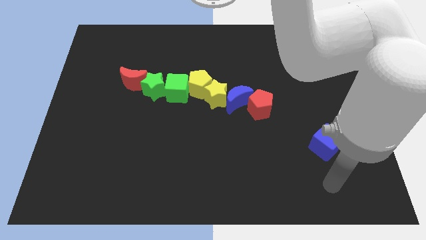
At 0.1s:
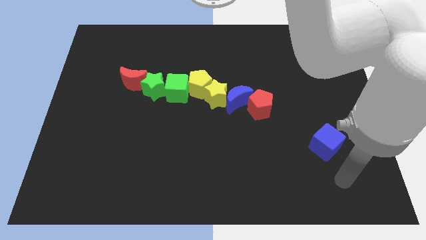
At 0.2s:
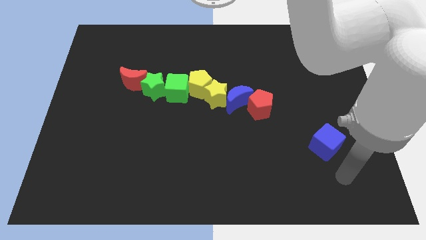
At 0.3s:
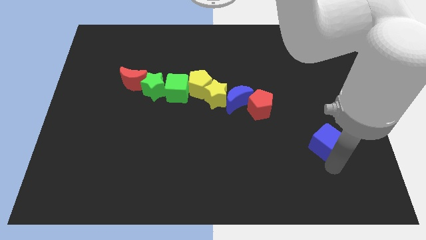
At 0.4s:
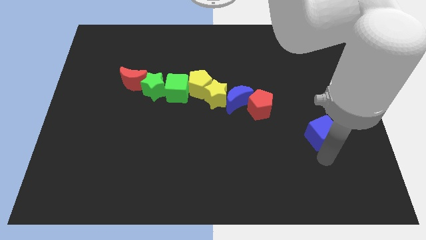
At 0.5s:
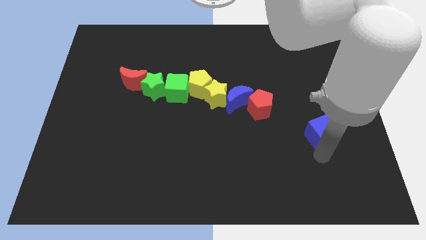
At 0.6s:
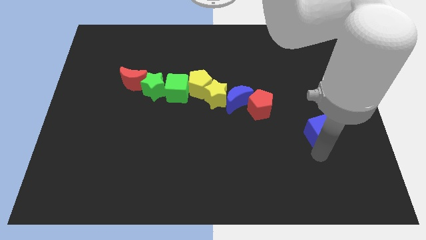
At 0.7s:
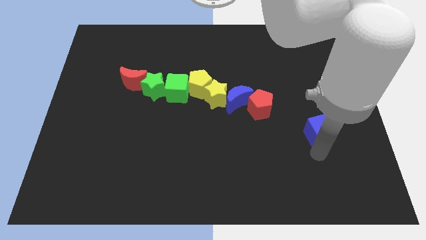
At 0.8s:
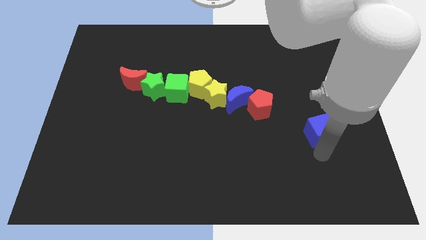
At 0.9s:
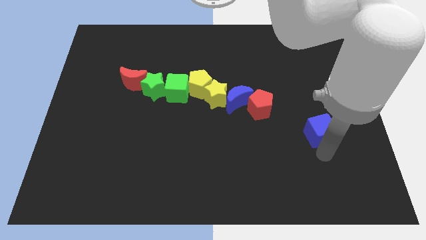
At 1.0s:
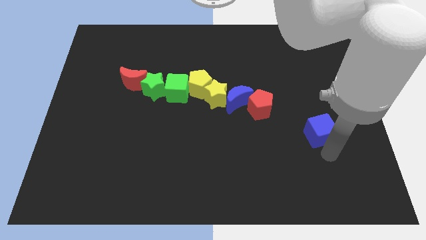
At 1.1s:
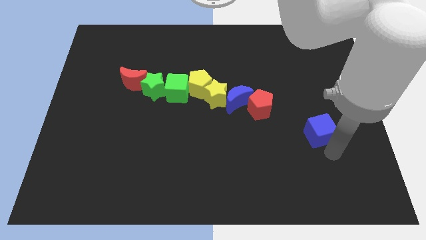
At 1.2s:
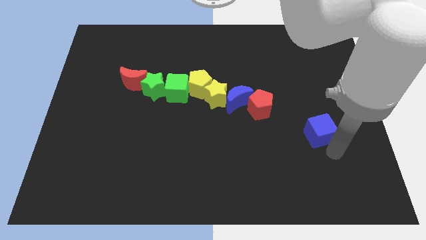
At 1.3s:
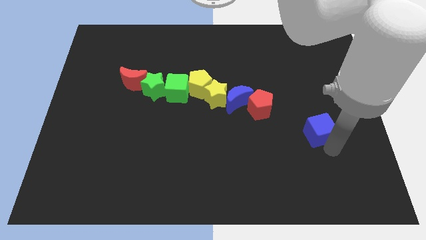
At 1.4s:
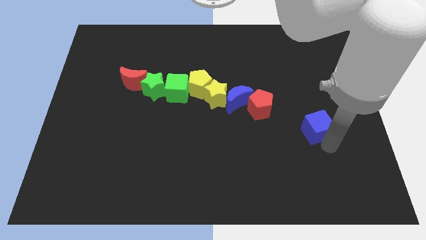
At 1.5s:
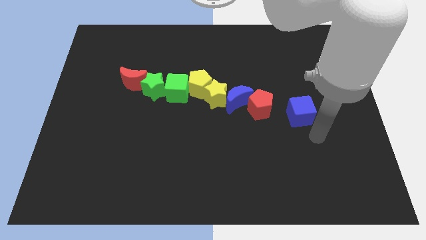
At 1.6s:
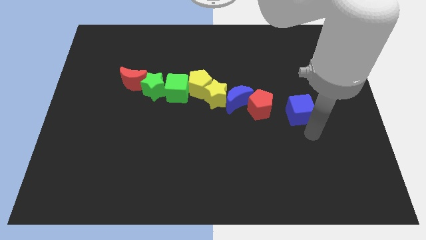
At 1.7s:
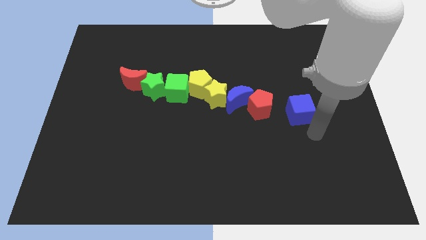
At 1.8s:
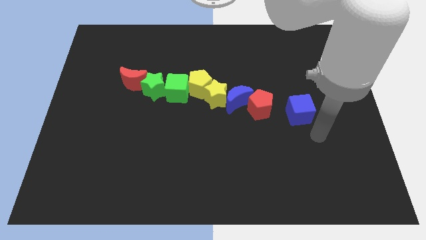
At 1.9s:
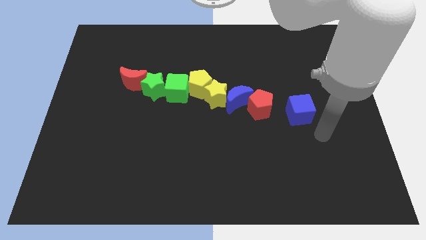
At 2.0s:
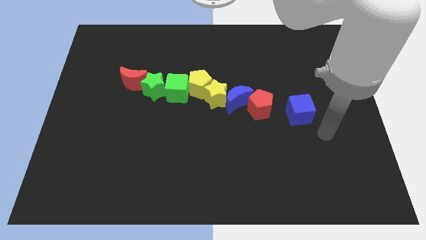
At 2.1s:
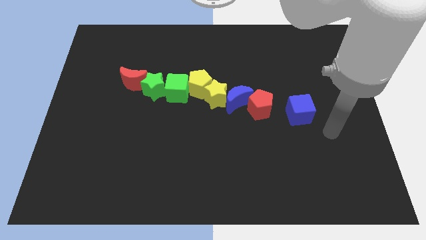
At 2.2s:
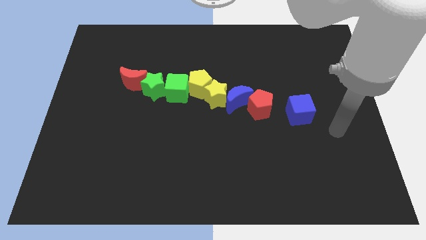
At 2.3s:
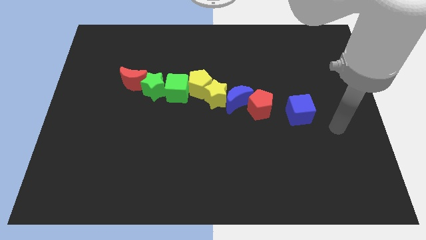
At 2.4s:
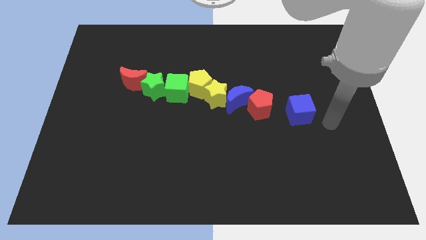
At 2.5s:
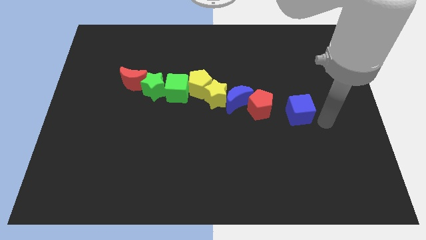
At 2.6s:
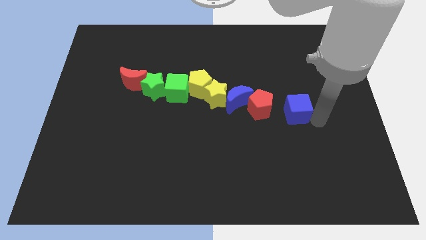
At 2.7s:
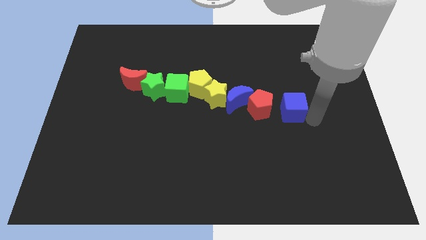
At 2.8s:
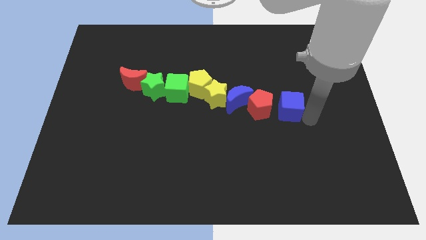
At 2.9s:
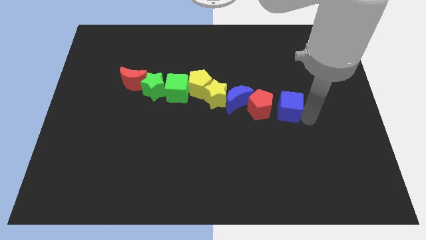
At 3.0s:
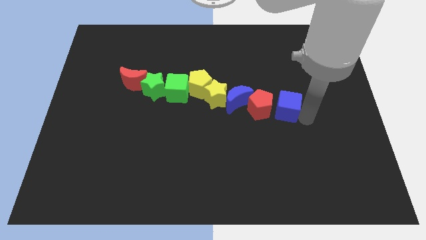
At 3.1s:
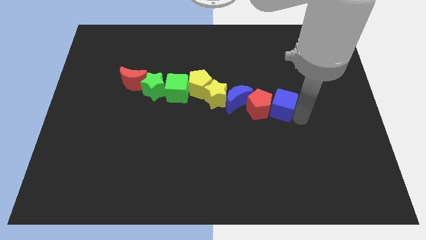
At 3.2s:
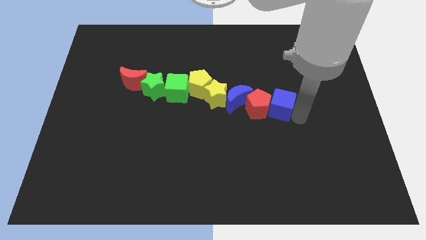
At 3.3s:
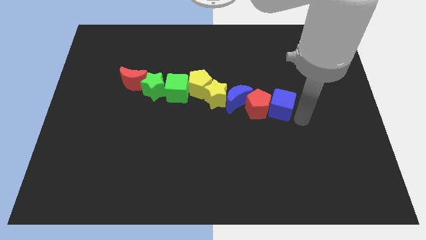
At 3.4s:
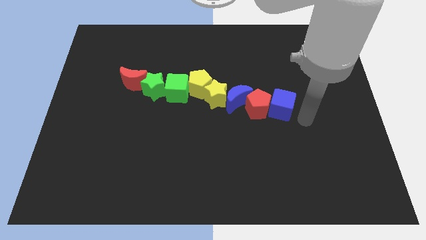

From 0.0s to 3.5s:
drag the blue cube into the right side of the red pentagon

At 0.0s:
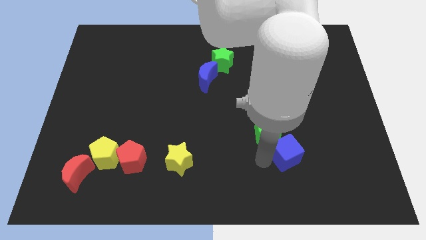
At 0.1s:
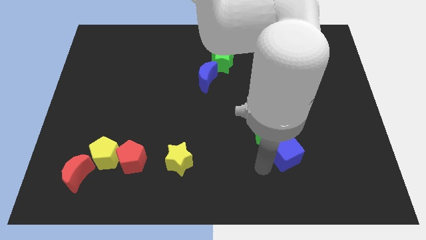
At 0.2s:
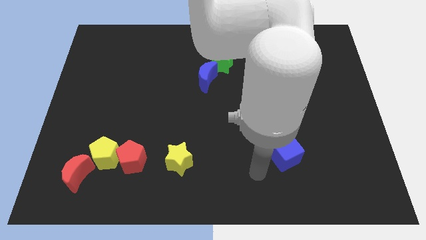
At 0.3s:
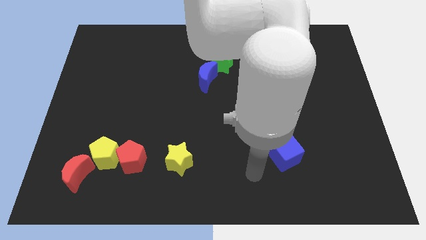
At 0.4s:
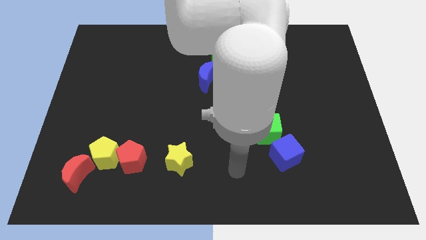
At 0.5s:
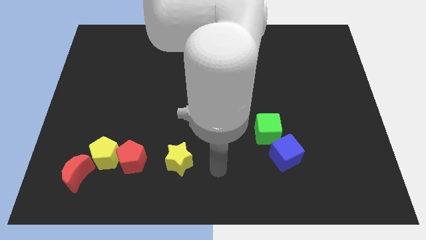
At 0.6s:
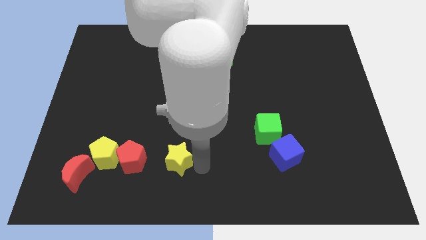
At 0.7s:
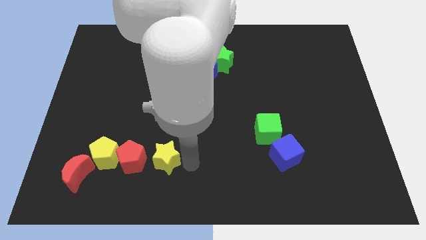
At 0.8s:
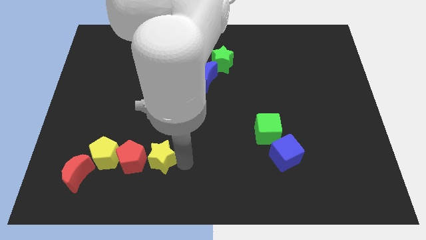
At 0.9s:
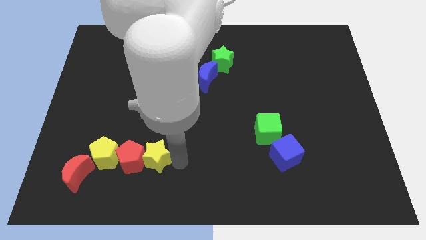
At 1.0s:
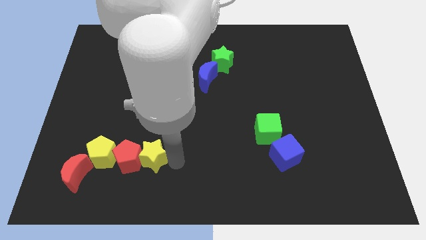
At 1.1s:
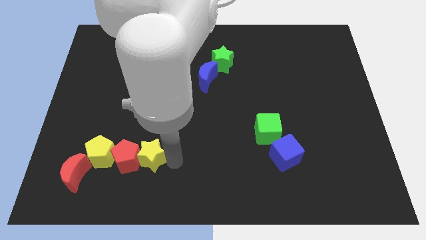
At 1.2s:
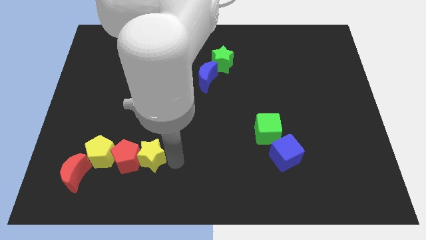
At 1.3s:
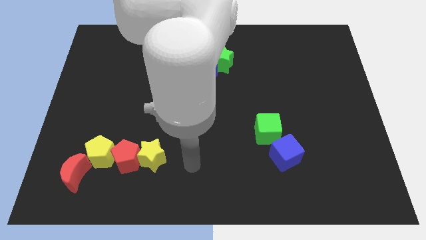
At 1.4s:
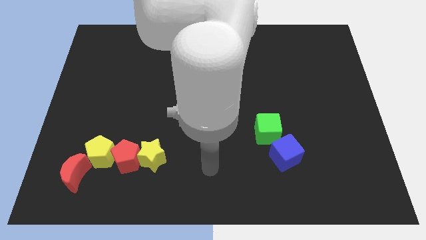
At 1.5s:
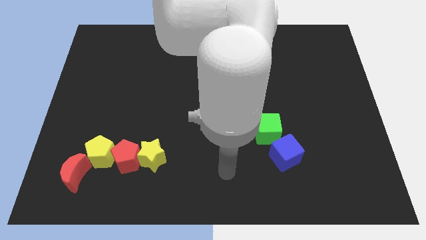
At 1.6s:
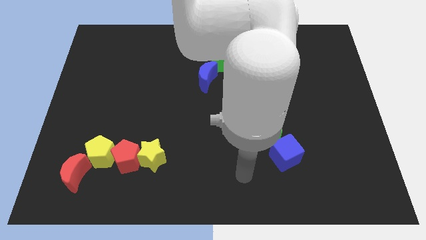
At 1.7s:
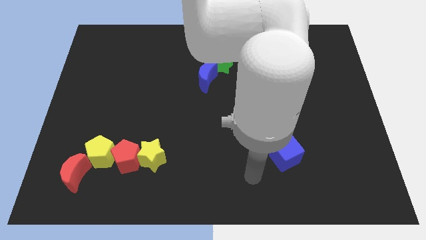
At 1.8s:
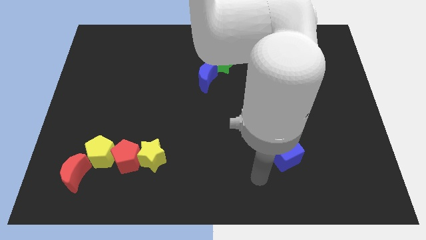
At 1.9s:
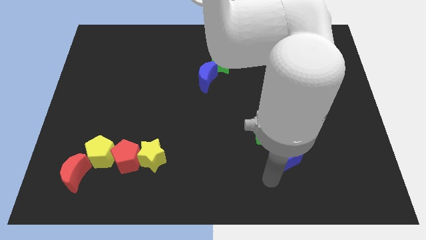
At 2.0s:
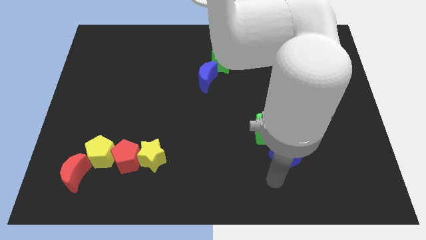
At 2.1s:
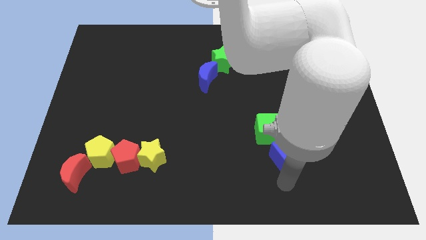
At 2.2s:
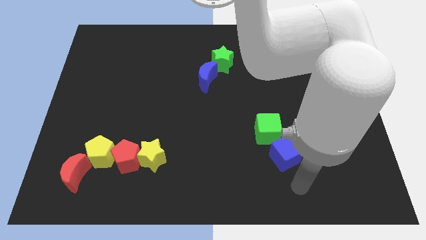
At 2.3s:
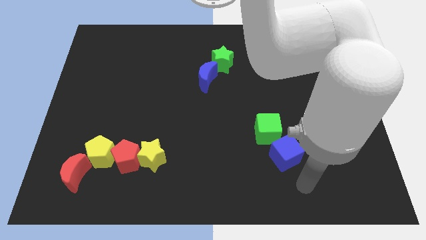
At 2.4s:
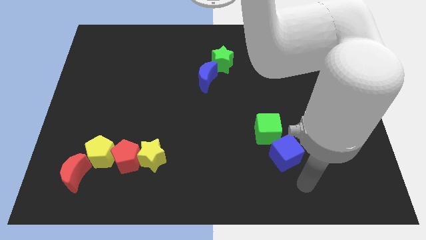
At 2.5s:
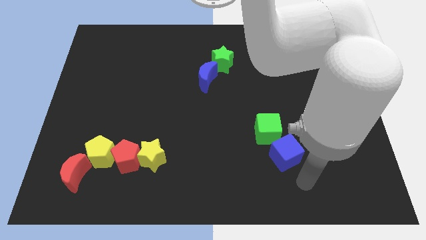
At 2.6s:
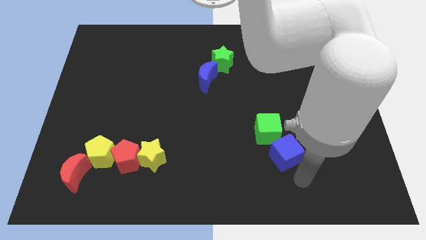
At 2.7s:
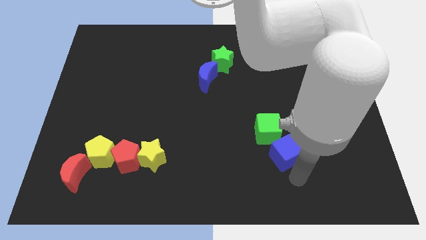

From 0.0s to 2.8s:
move the yellow star into the red pentagon

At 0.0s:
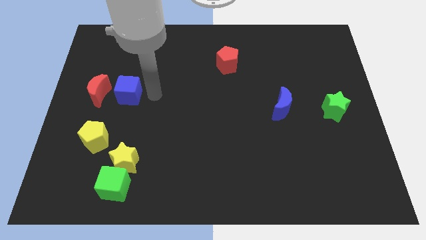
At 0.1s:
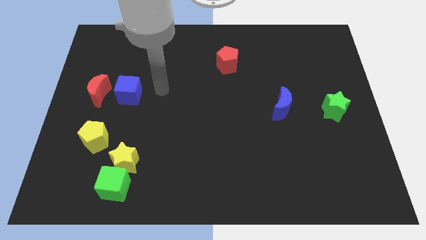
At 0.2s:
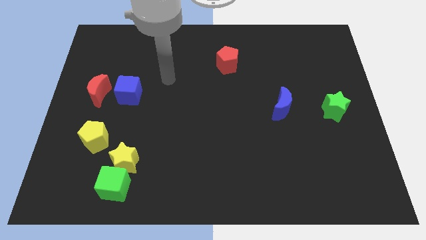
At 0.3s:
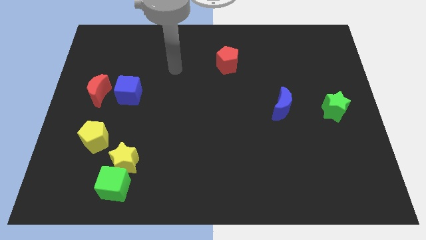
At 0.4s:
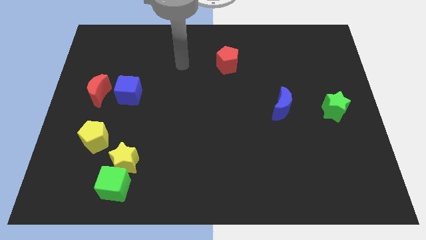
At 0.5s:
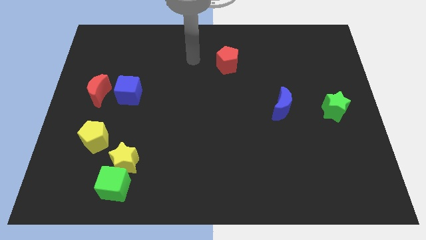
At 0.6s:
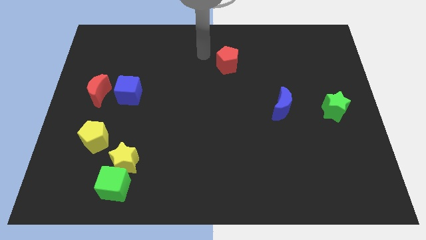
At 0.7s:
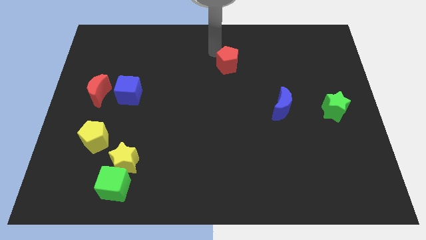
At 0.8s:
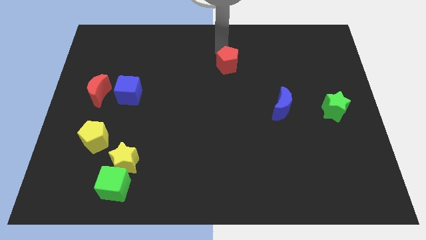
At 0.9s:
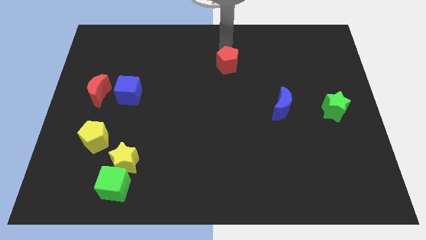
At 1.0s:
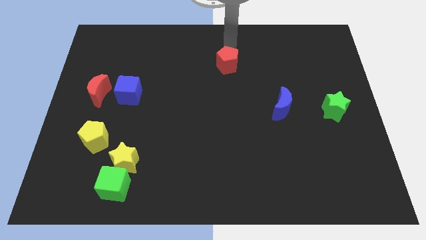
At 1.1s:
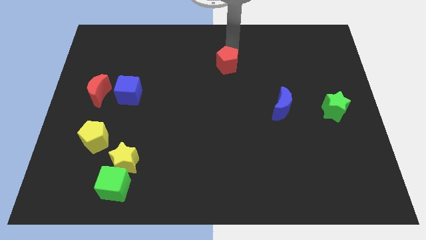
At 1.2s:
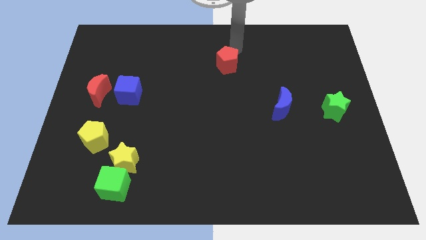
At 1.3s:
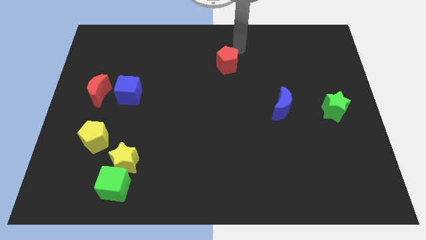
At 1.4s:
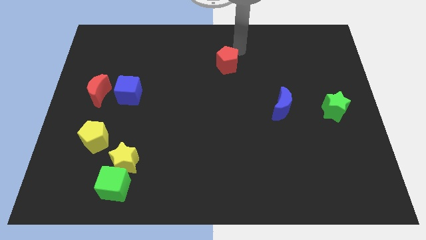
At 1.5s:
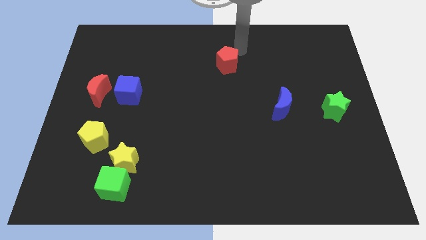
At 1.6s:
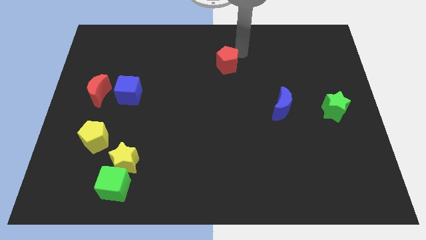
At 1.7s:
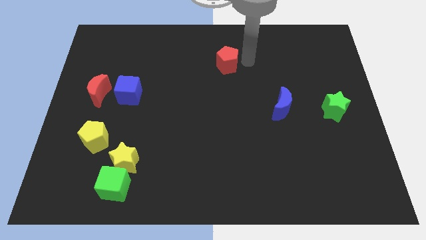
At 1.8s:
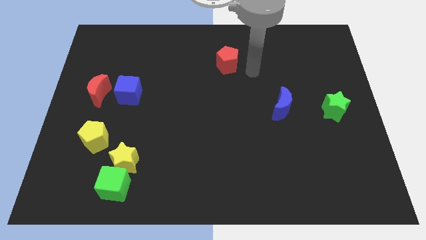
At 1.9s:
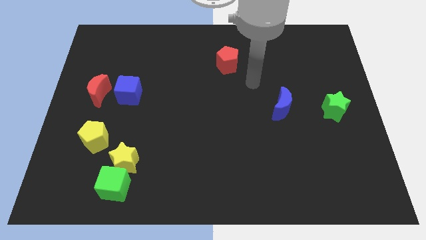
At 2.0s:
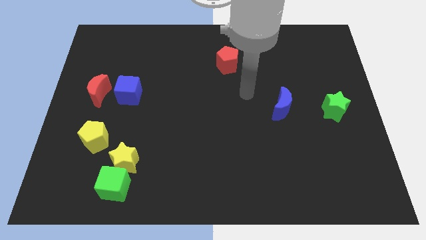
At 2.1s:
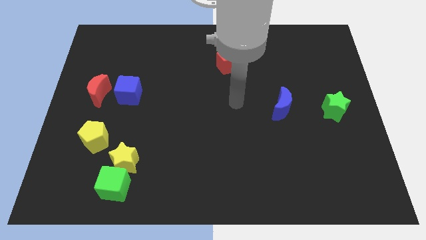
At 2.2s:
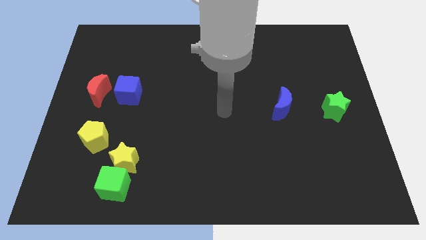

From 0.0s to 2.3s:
place your hand at the center of the board

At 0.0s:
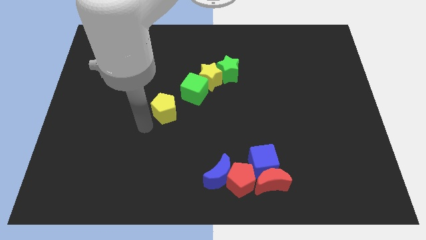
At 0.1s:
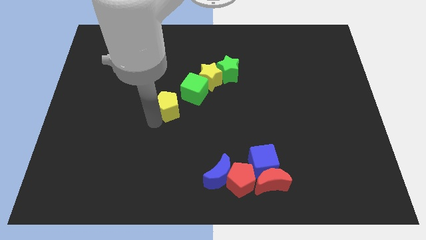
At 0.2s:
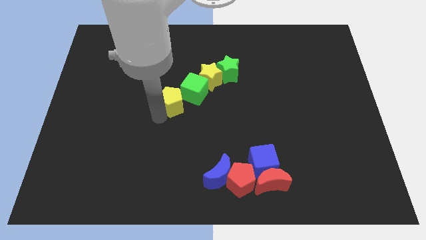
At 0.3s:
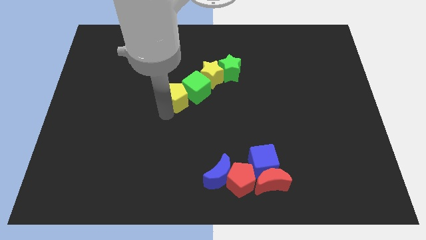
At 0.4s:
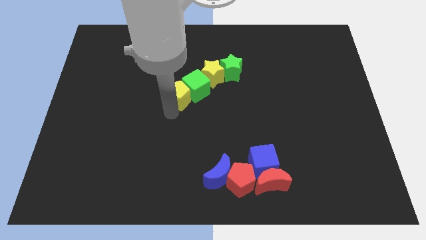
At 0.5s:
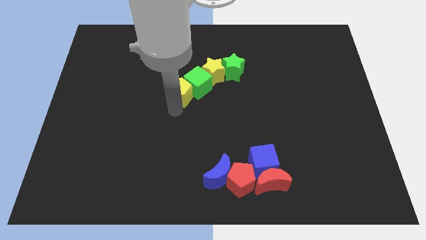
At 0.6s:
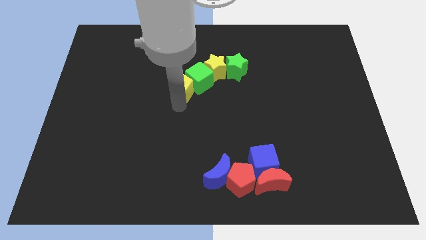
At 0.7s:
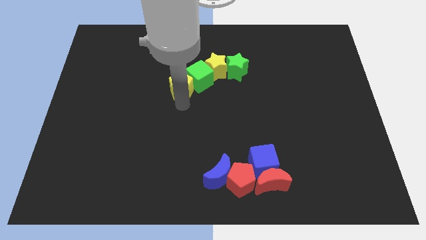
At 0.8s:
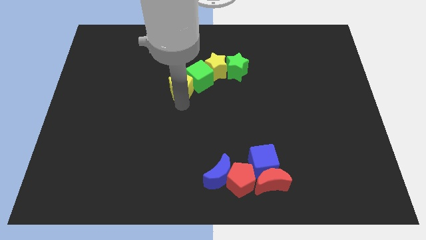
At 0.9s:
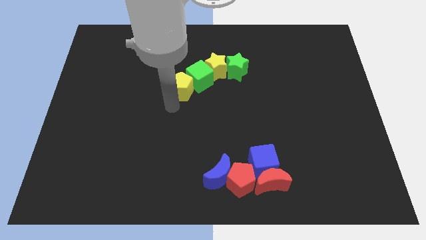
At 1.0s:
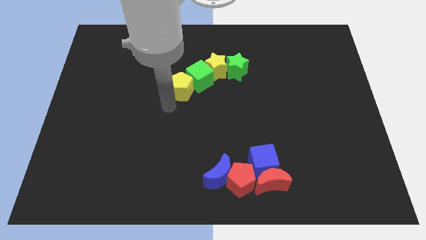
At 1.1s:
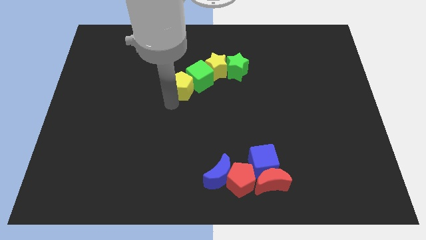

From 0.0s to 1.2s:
push yellow pentagon into green cube
